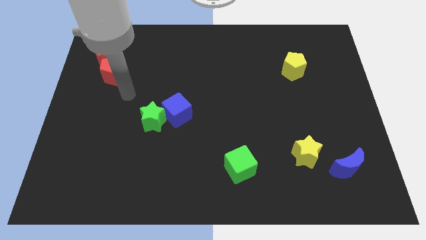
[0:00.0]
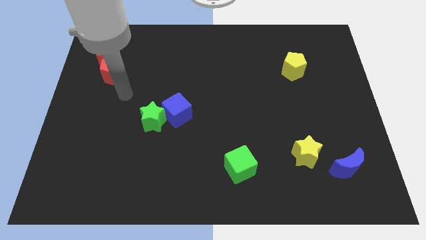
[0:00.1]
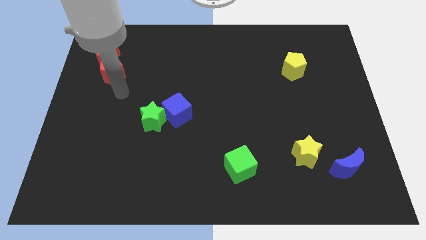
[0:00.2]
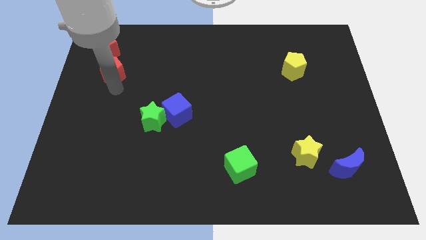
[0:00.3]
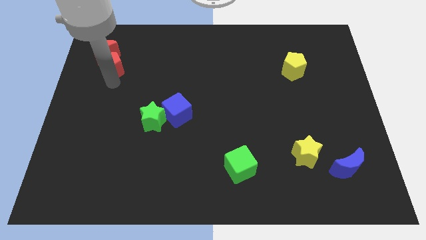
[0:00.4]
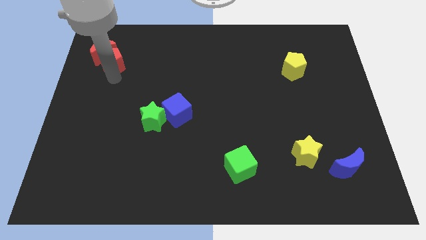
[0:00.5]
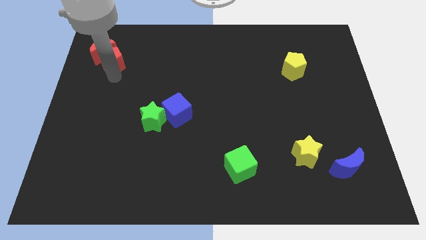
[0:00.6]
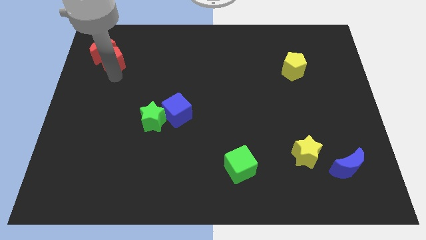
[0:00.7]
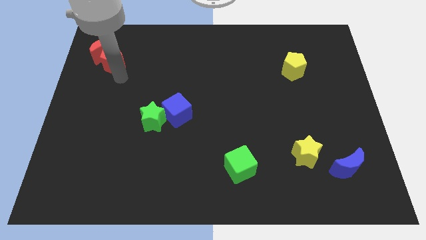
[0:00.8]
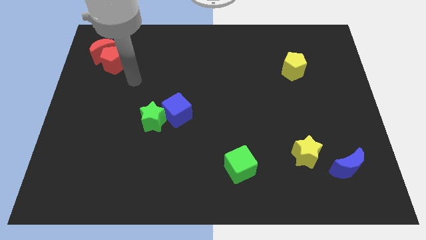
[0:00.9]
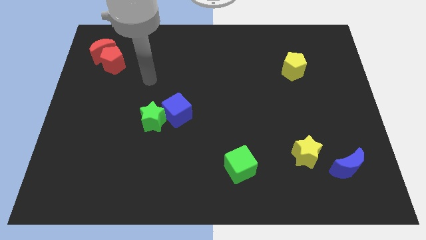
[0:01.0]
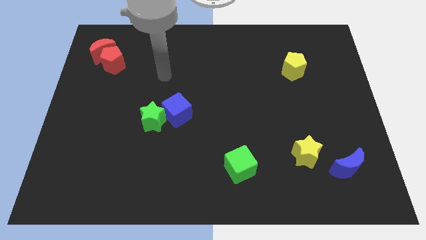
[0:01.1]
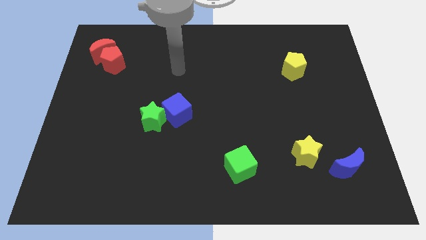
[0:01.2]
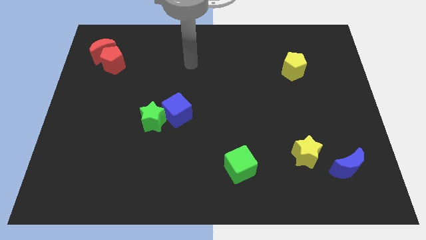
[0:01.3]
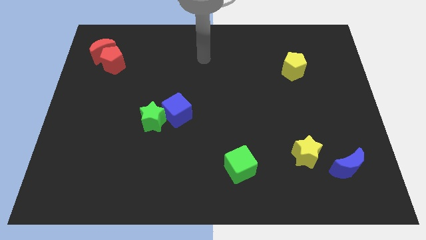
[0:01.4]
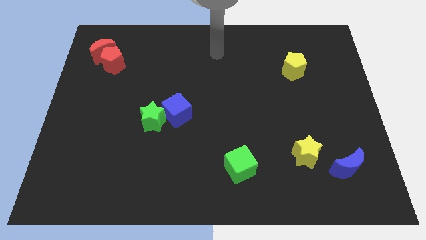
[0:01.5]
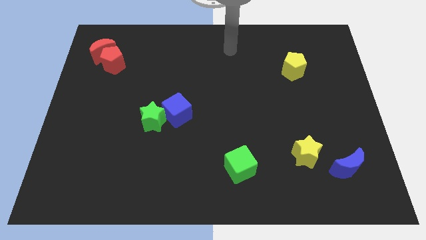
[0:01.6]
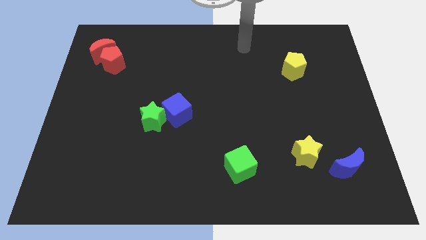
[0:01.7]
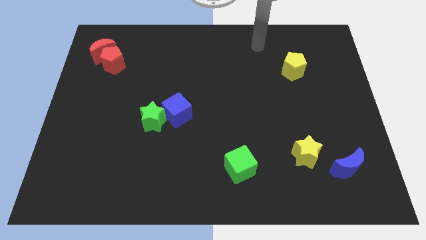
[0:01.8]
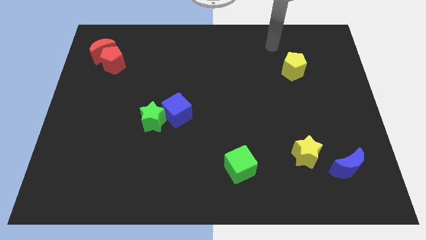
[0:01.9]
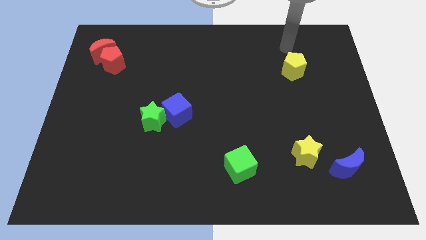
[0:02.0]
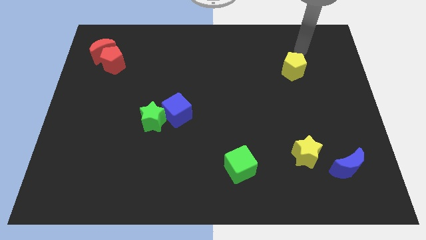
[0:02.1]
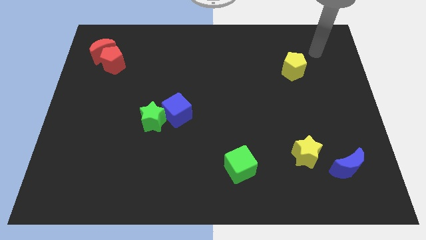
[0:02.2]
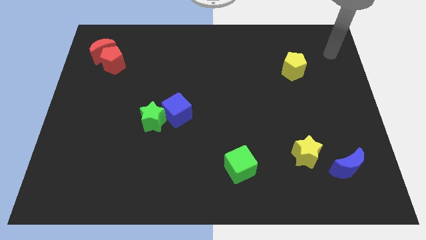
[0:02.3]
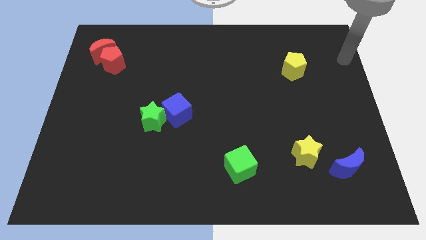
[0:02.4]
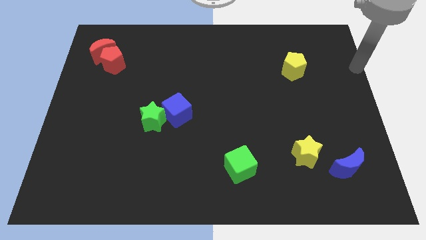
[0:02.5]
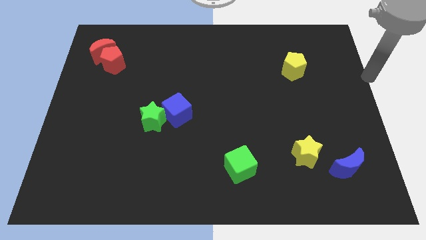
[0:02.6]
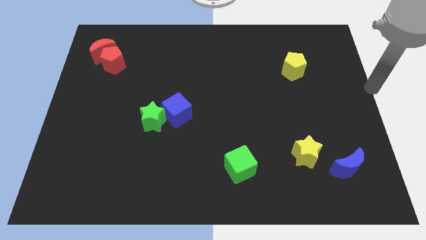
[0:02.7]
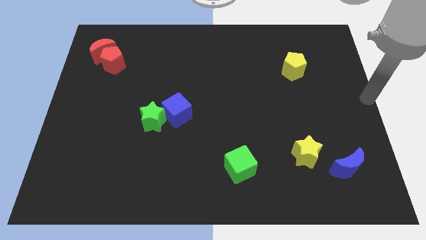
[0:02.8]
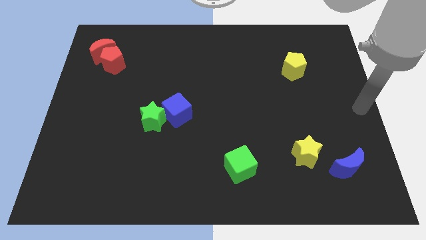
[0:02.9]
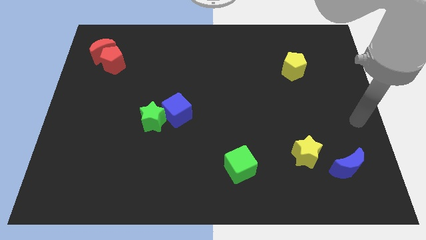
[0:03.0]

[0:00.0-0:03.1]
point your arm at the top of the blue crescent

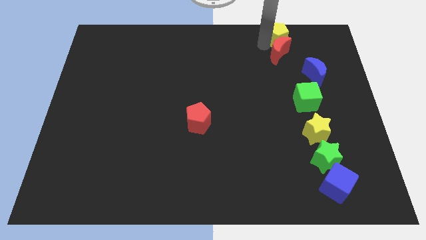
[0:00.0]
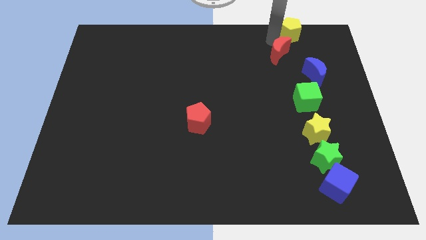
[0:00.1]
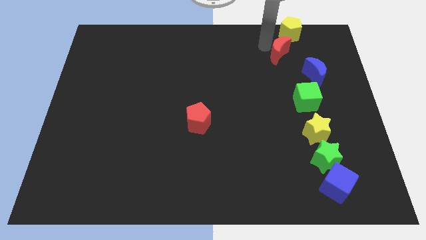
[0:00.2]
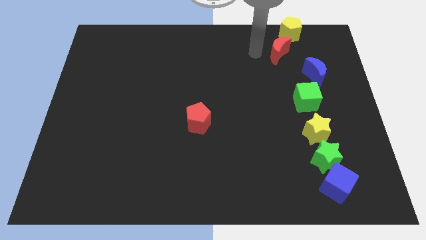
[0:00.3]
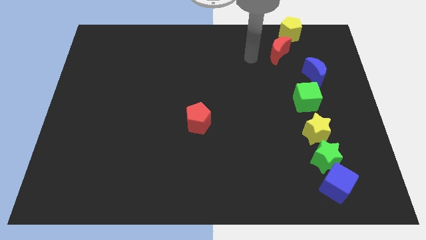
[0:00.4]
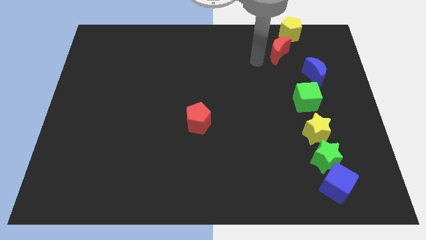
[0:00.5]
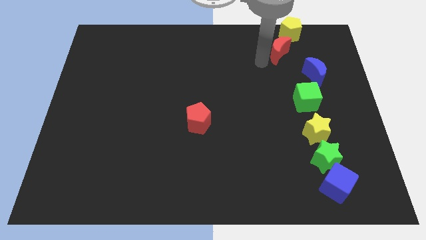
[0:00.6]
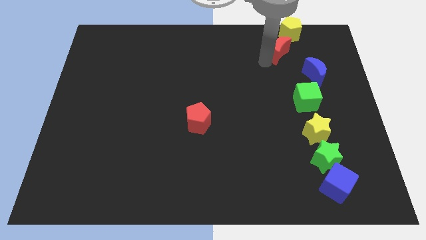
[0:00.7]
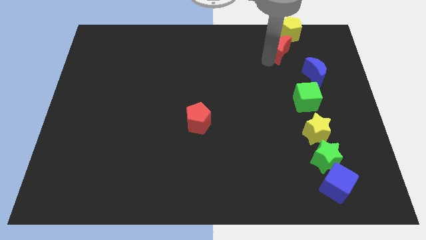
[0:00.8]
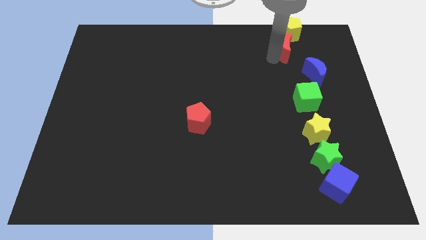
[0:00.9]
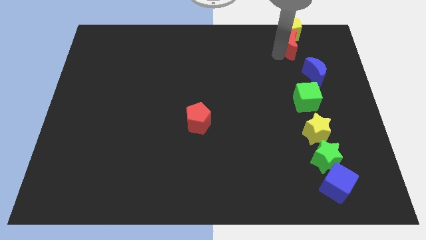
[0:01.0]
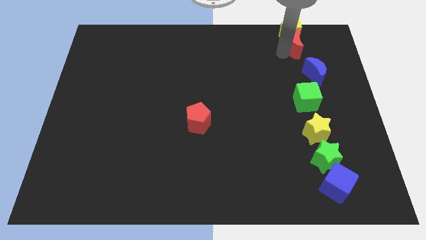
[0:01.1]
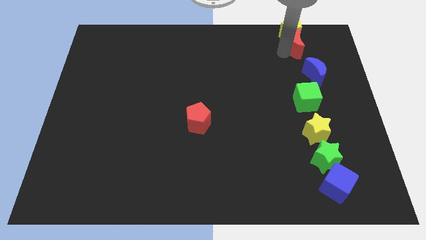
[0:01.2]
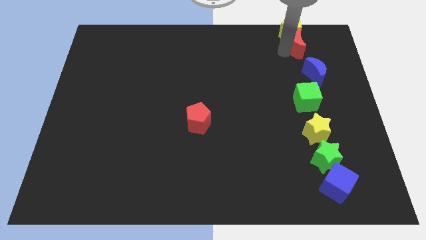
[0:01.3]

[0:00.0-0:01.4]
move the red moon to the bottom side of the yellow pentagon

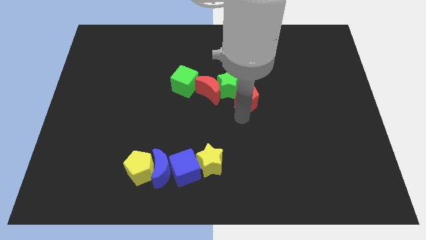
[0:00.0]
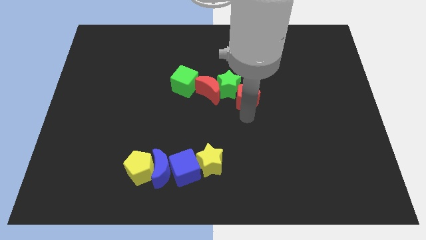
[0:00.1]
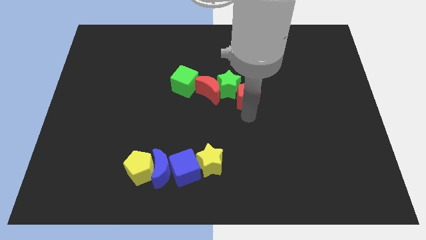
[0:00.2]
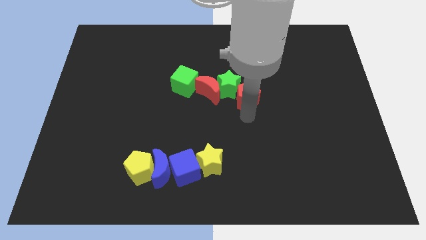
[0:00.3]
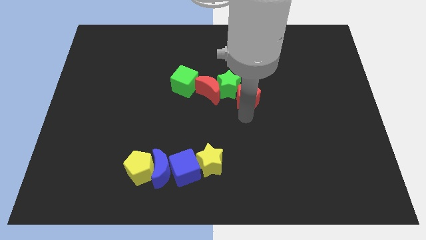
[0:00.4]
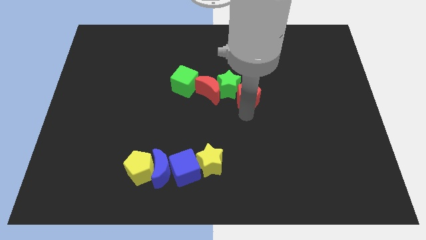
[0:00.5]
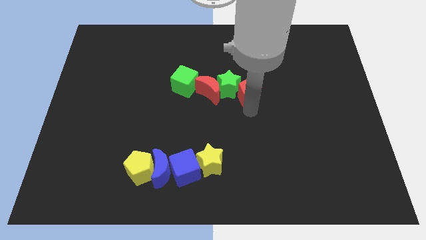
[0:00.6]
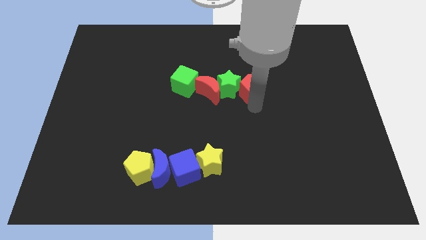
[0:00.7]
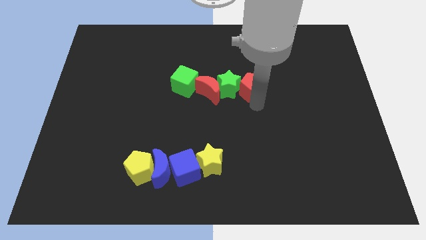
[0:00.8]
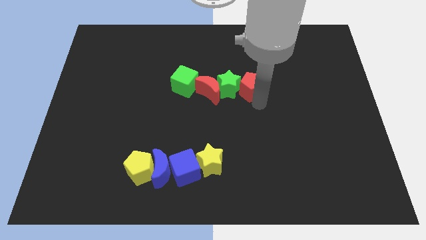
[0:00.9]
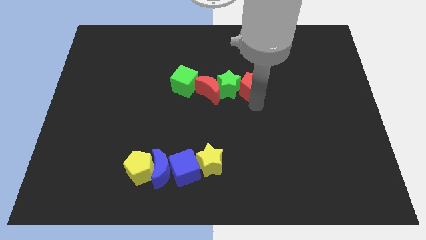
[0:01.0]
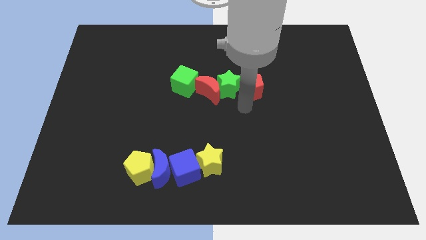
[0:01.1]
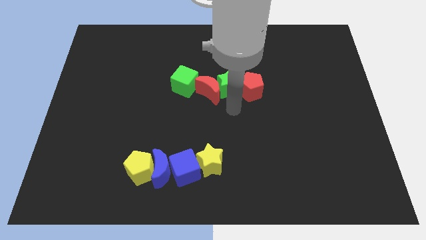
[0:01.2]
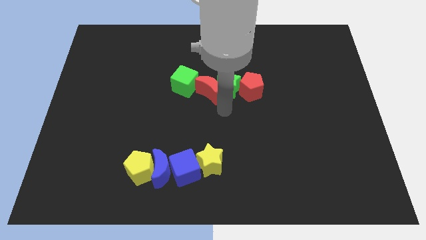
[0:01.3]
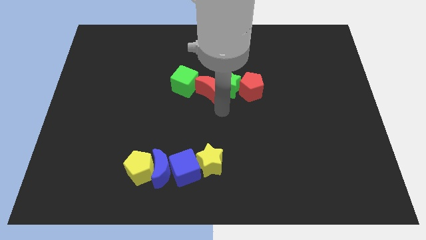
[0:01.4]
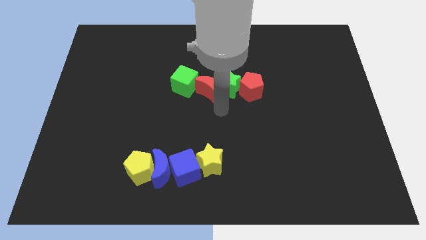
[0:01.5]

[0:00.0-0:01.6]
put the red pentagon right to the green star

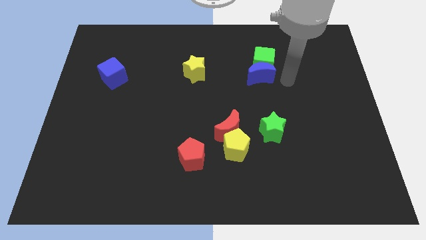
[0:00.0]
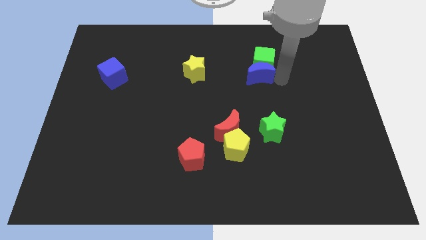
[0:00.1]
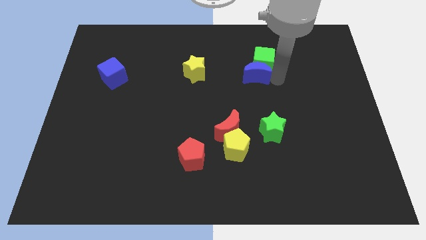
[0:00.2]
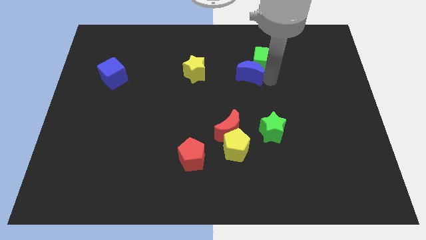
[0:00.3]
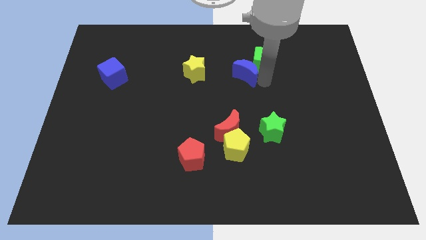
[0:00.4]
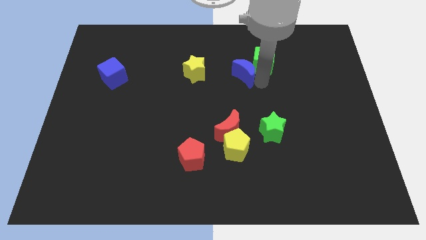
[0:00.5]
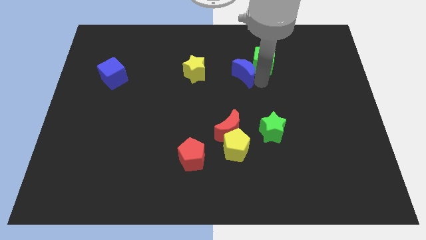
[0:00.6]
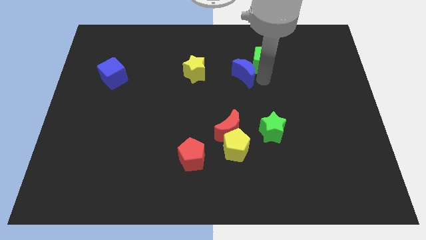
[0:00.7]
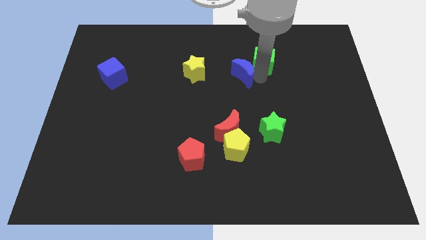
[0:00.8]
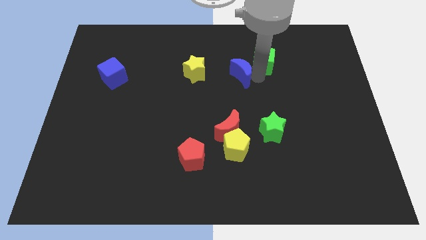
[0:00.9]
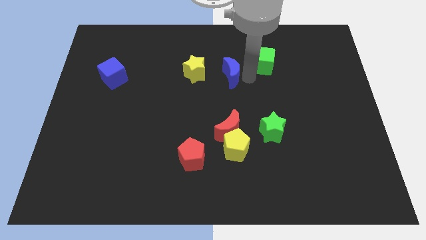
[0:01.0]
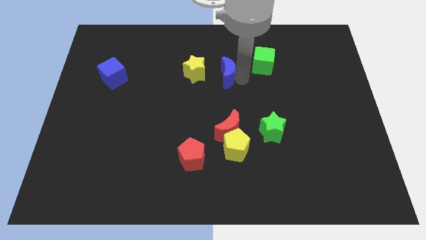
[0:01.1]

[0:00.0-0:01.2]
put the blue crescent vertically above the red crescent

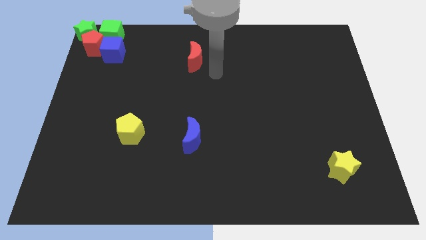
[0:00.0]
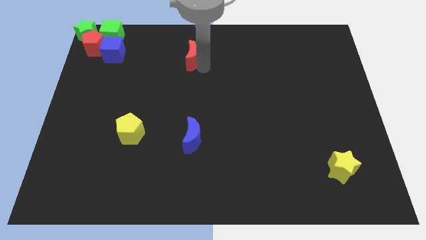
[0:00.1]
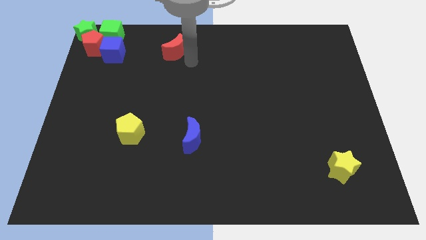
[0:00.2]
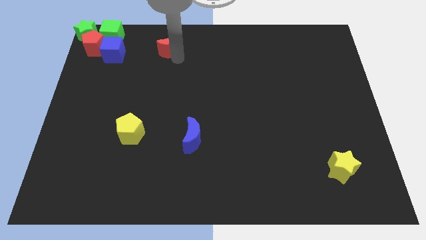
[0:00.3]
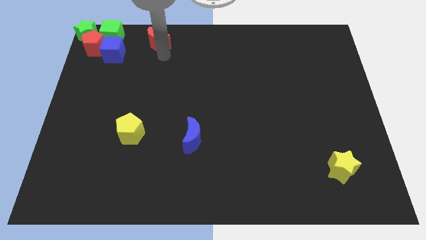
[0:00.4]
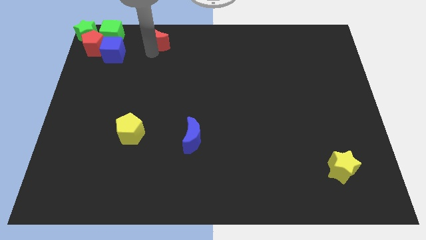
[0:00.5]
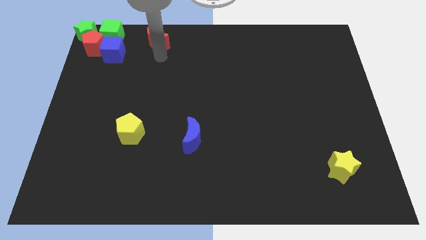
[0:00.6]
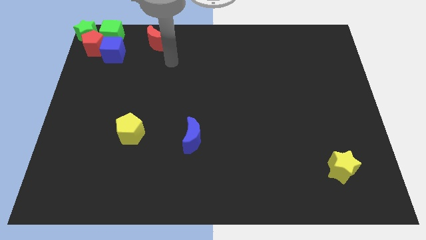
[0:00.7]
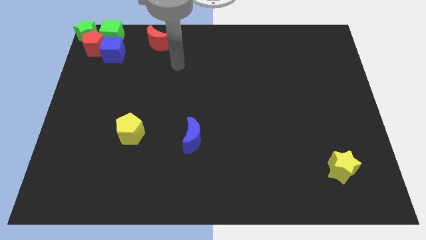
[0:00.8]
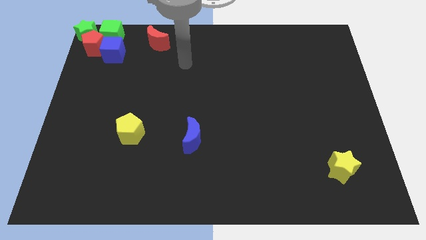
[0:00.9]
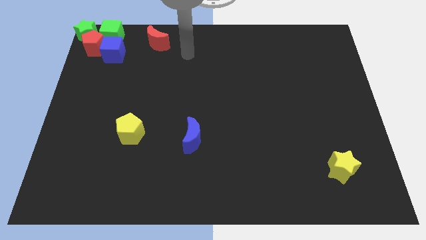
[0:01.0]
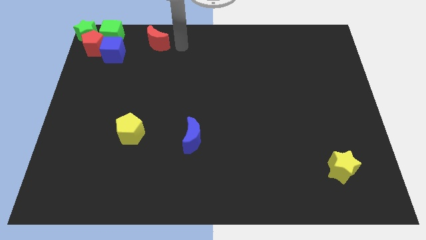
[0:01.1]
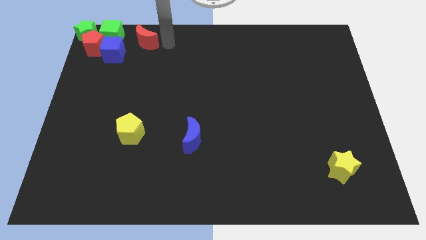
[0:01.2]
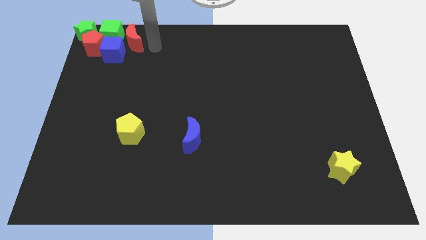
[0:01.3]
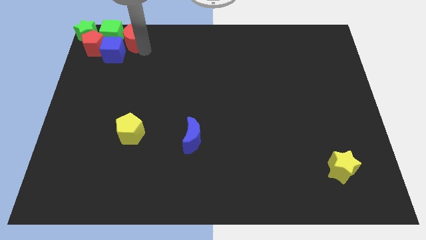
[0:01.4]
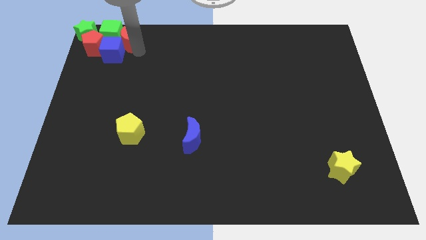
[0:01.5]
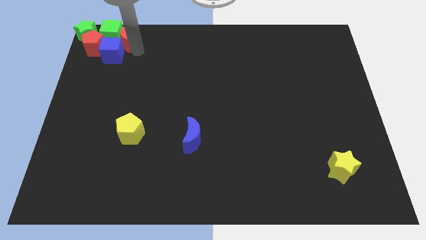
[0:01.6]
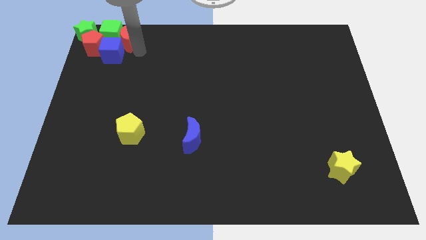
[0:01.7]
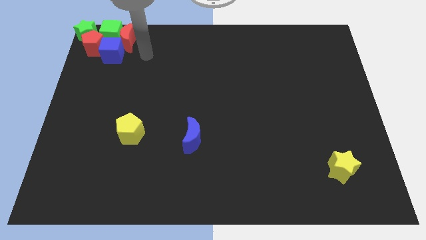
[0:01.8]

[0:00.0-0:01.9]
push red moon into the green cube
